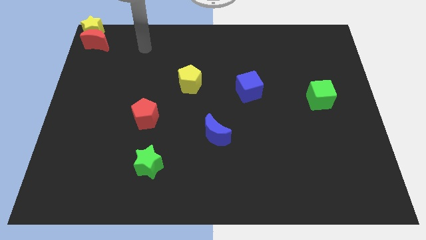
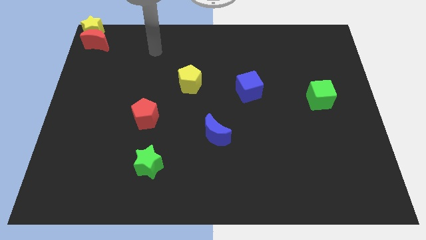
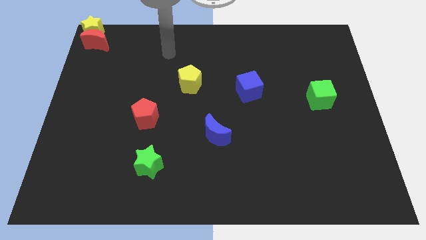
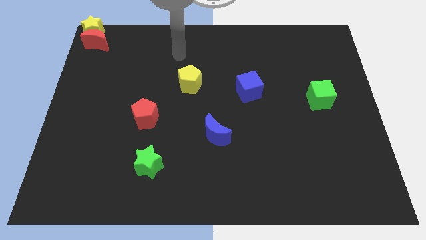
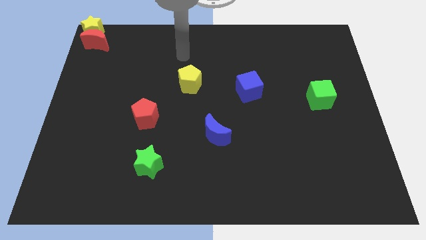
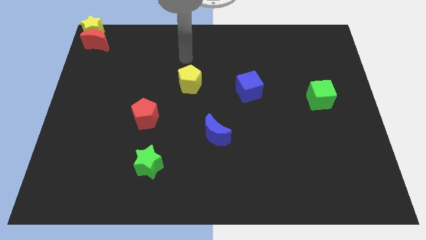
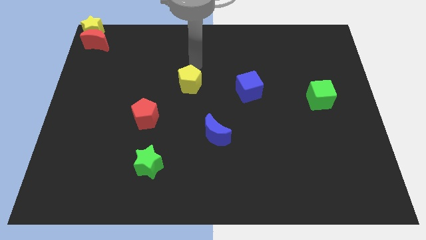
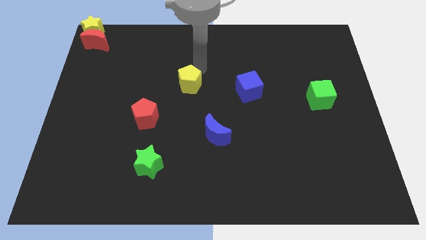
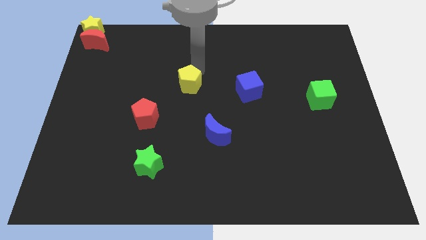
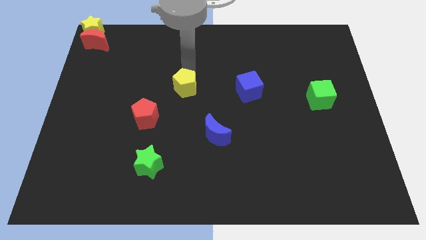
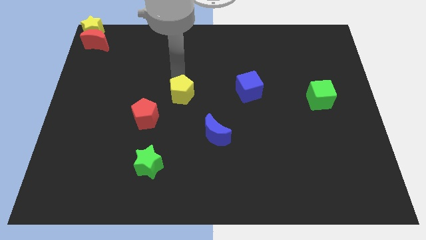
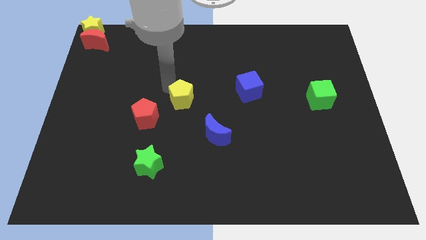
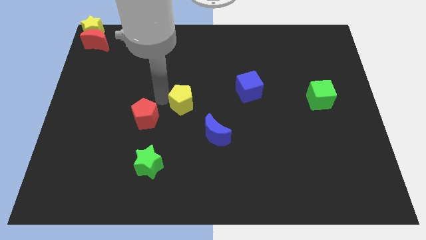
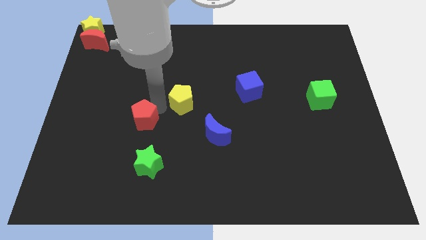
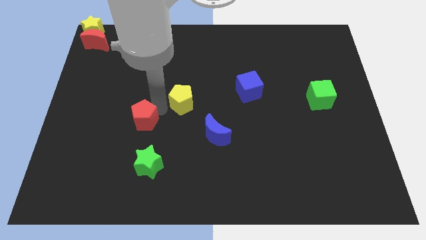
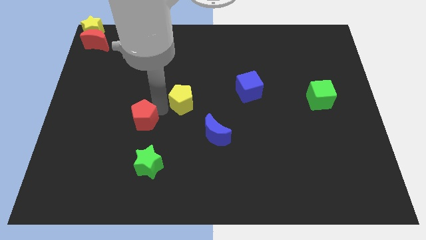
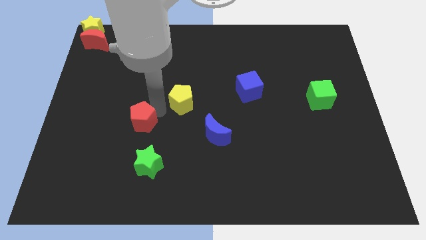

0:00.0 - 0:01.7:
slide the yellow pentagon diagonally bottom left to the blue cube

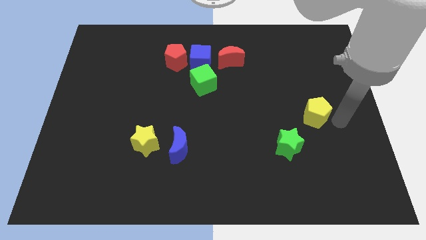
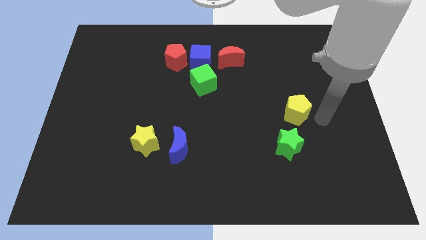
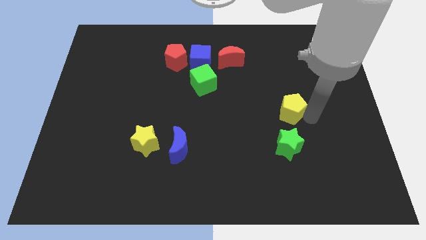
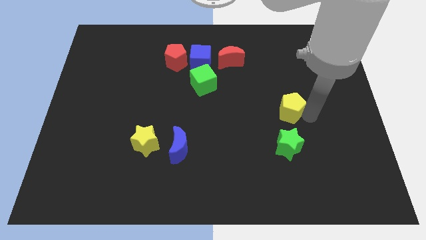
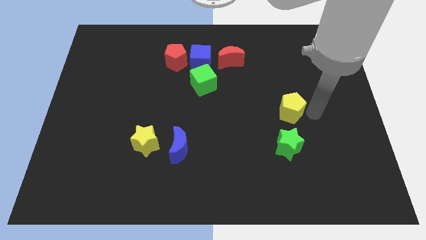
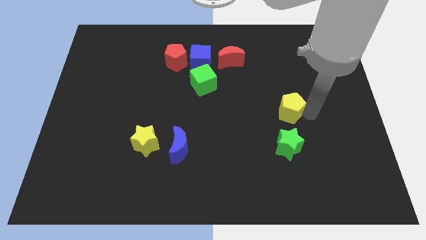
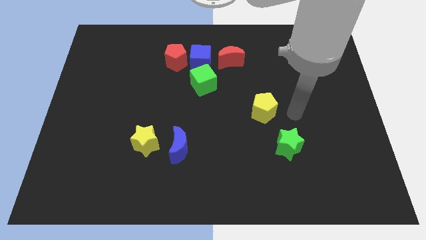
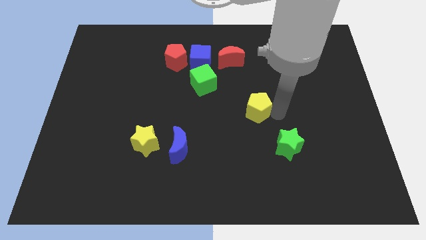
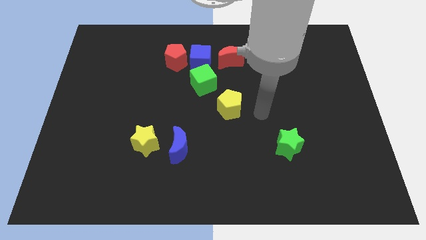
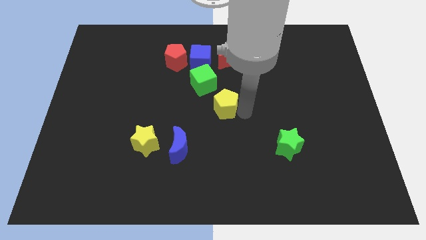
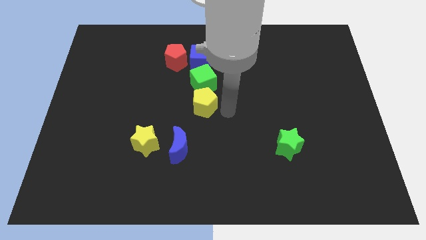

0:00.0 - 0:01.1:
move the yellow pentagon towards the bottom side of the green cube

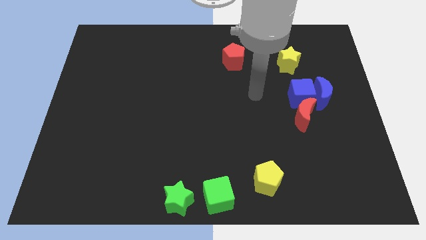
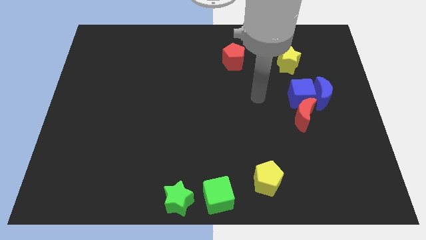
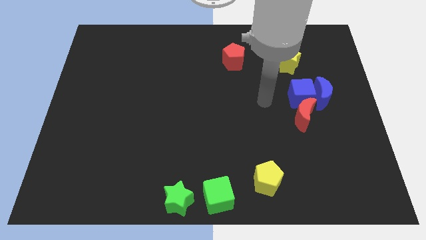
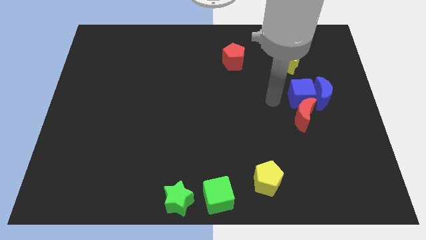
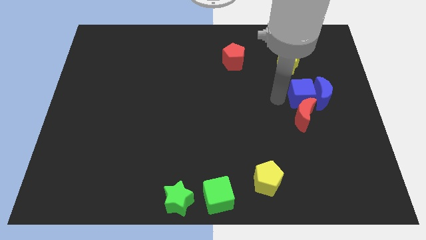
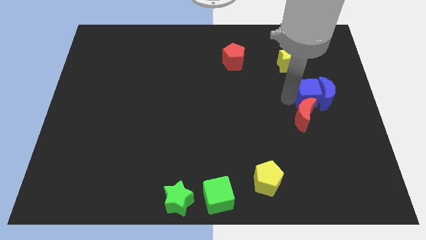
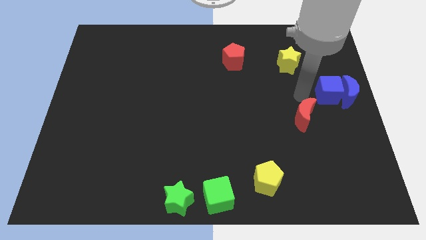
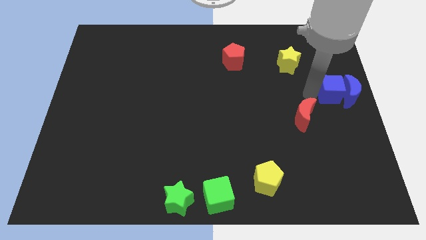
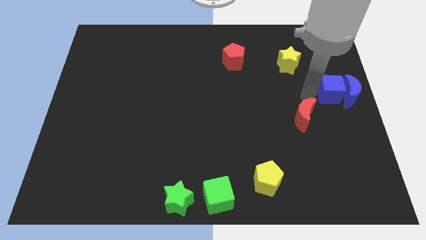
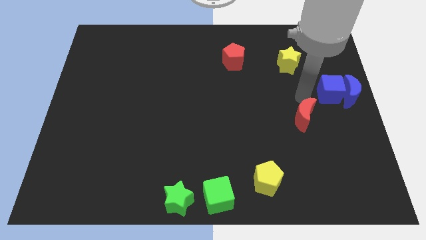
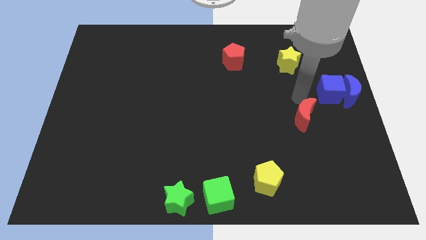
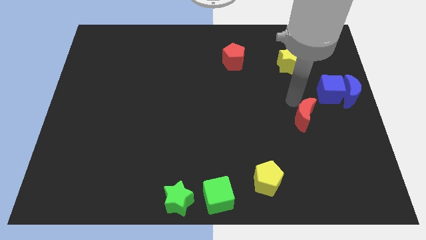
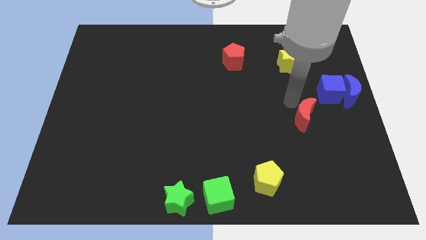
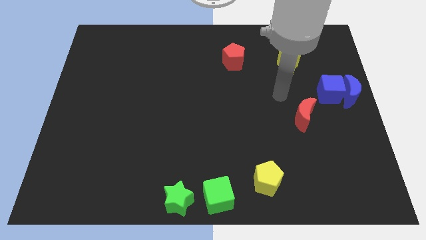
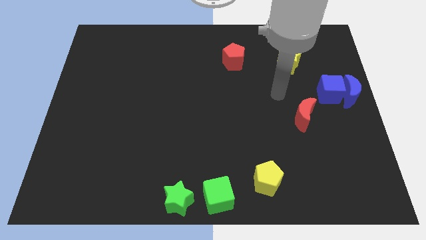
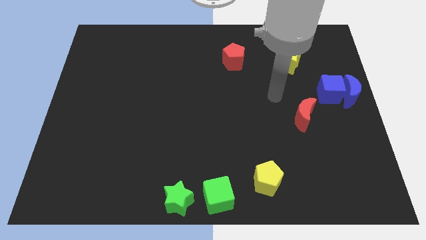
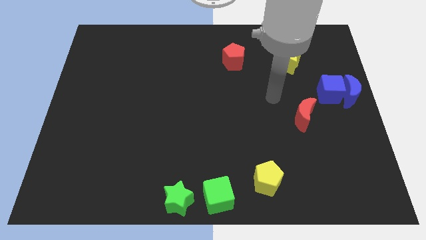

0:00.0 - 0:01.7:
push the blue crescent with blue cube to the center right of the board

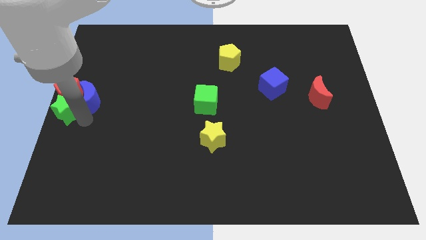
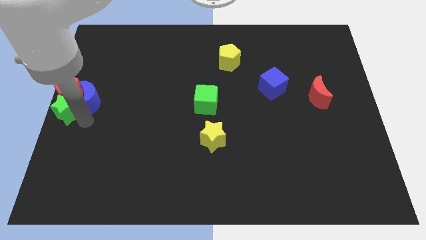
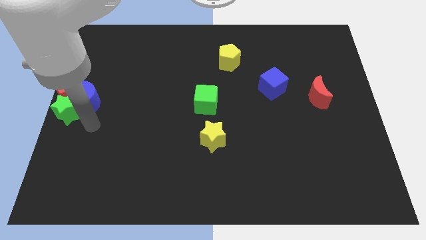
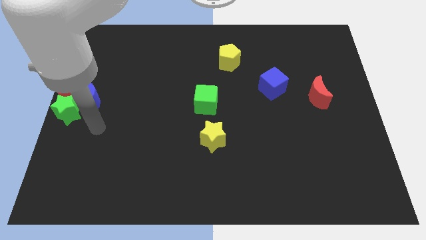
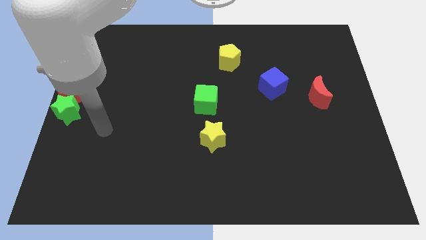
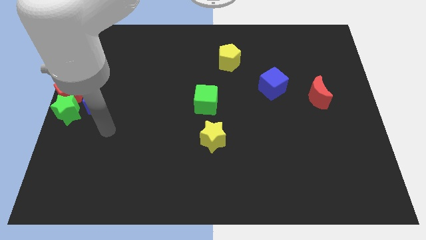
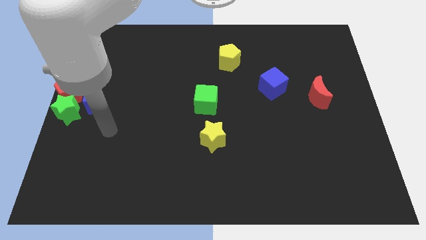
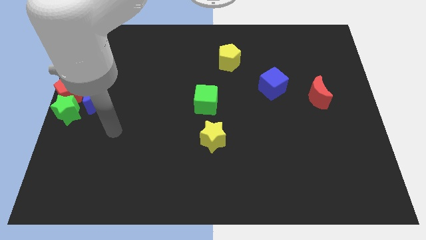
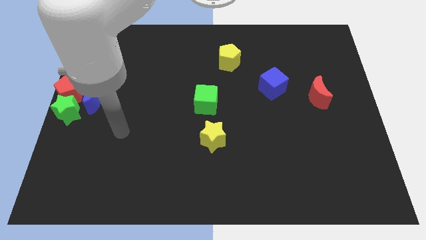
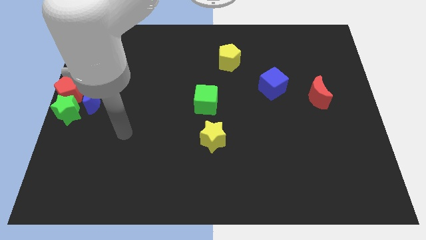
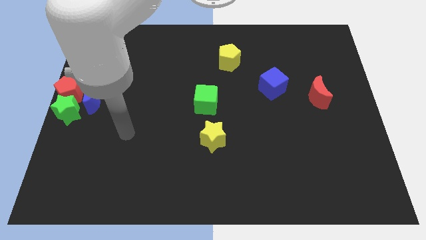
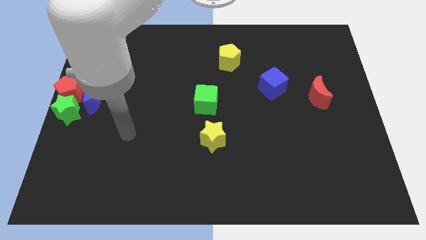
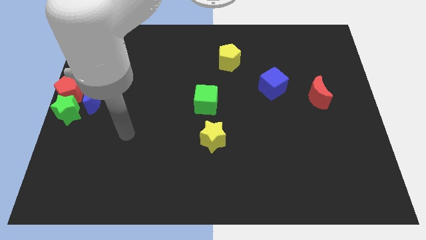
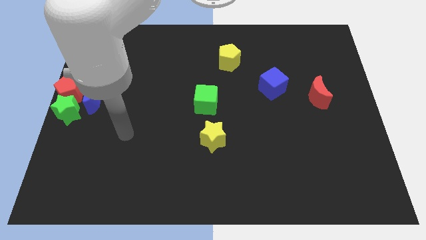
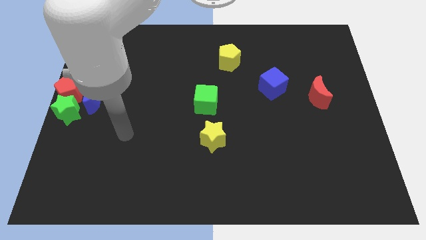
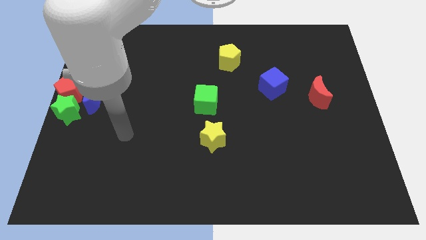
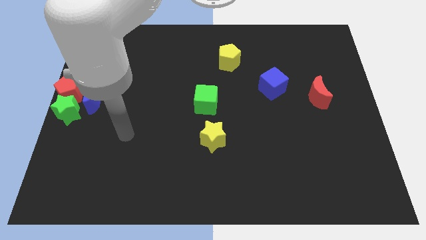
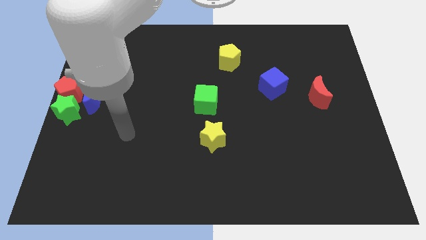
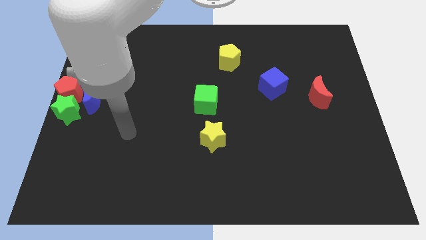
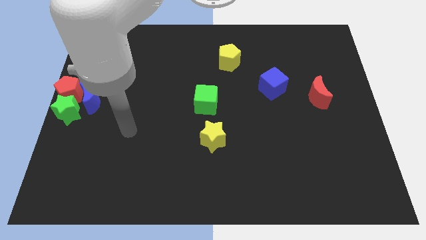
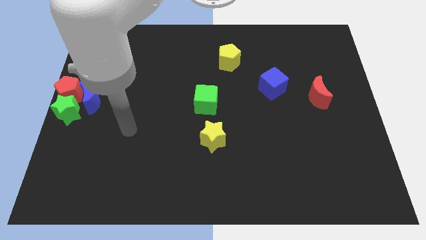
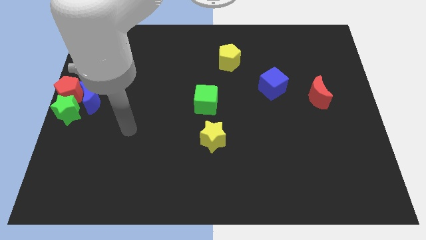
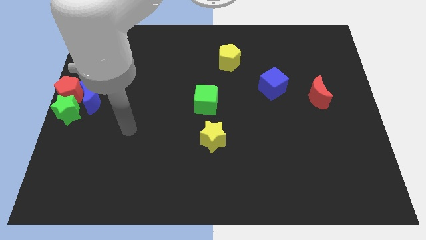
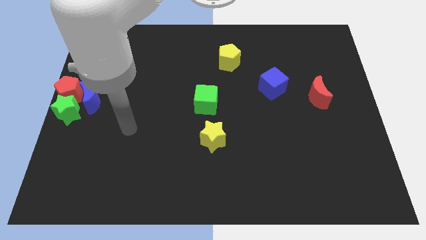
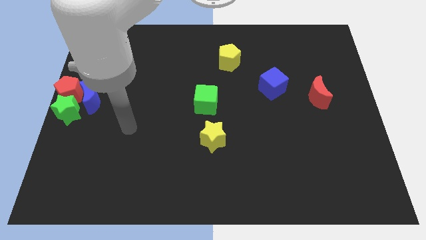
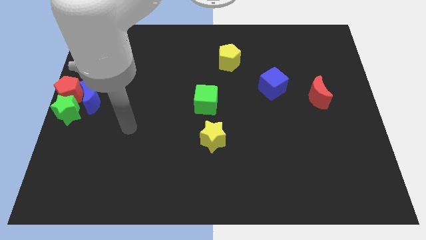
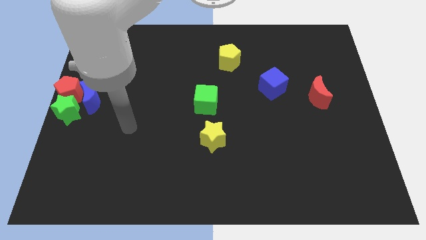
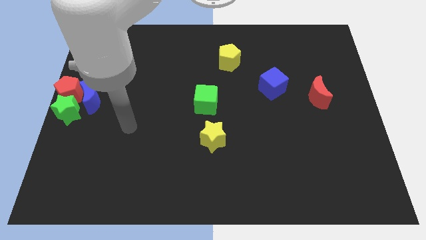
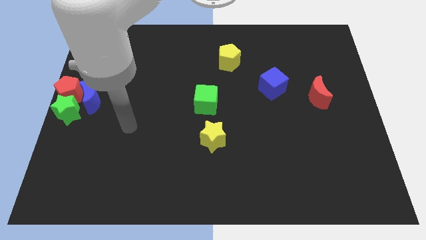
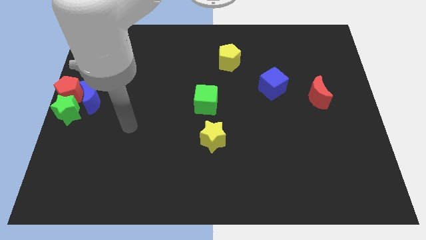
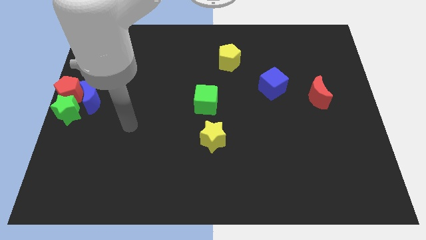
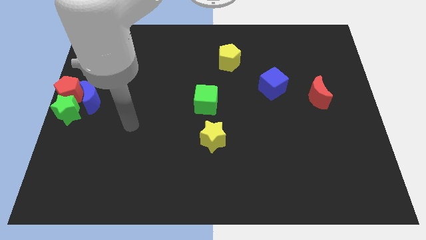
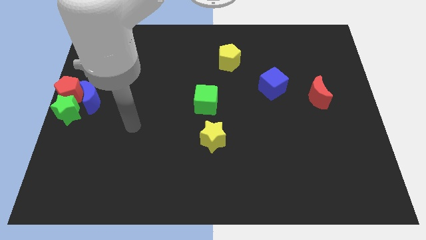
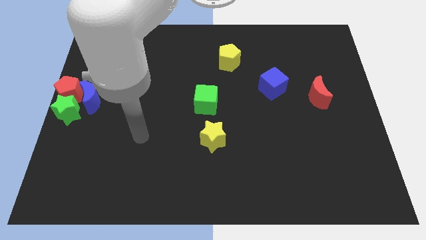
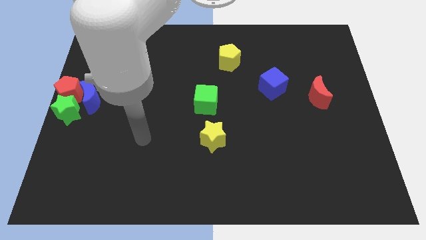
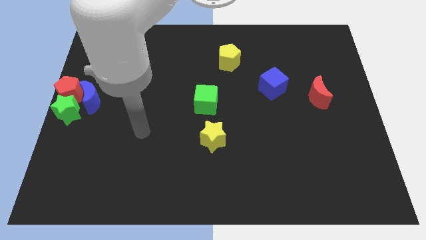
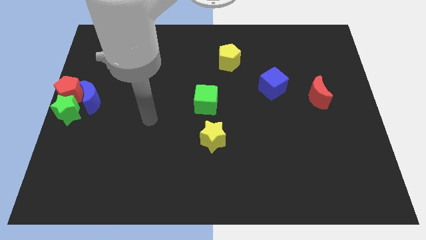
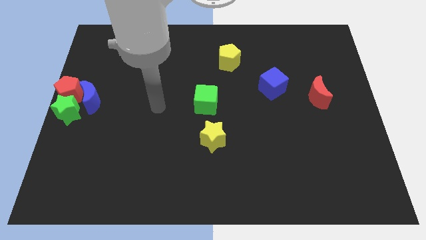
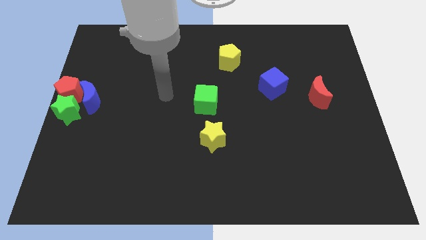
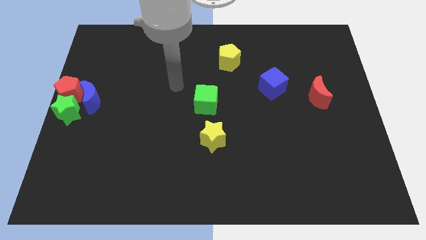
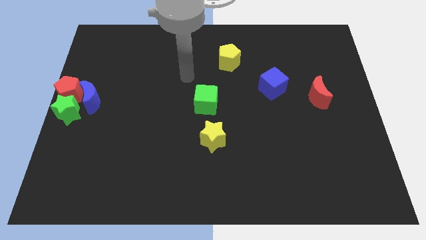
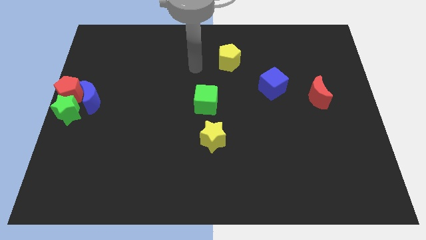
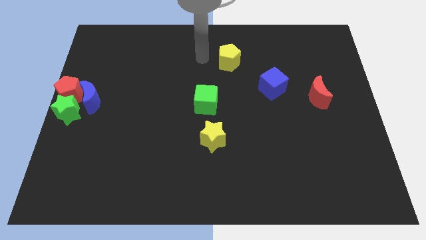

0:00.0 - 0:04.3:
place your arm to the left of the yellow pentagon

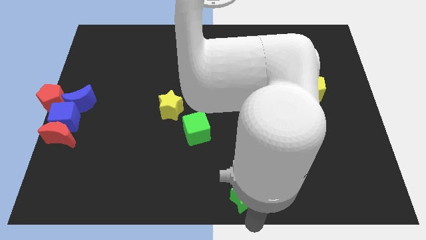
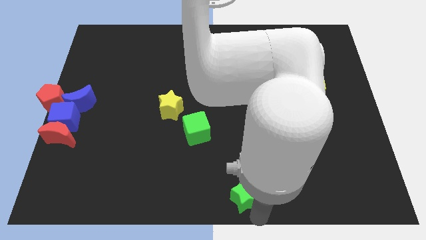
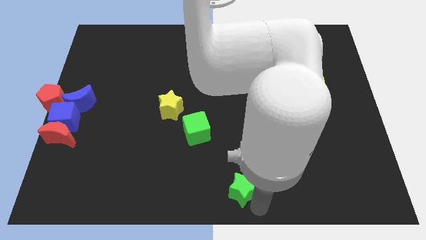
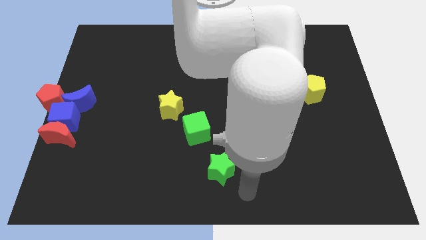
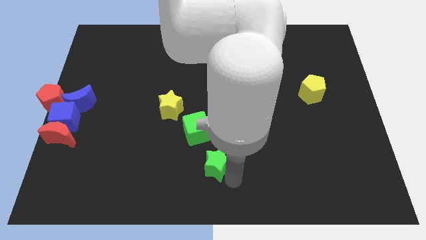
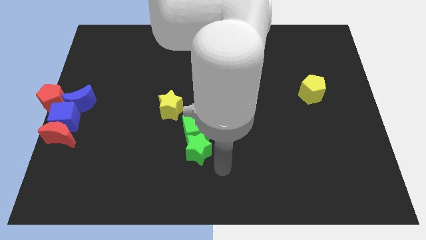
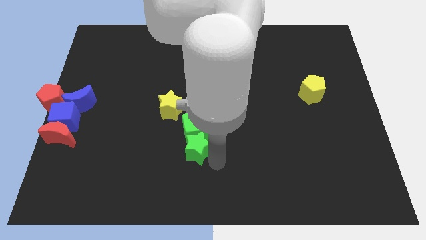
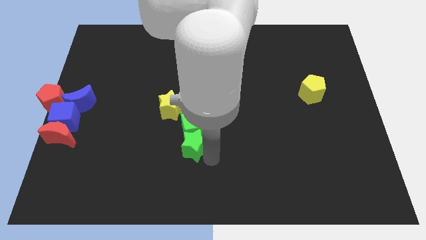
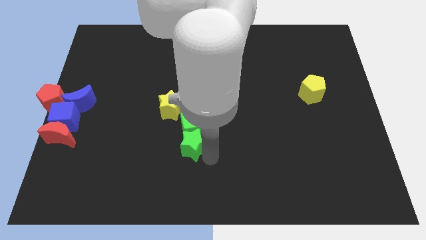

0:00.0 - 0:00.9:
move green star below the green cube
